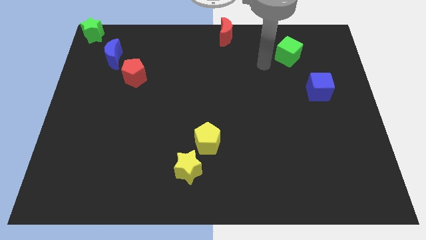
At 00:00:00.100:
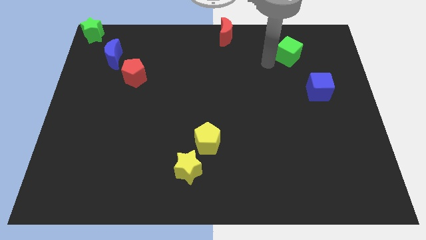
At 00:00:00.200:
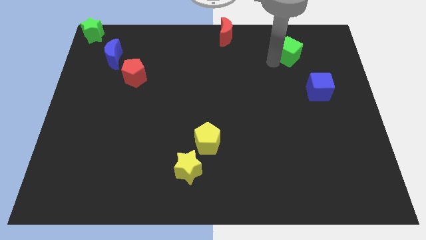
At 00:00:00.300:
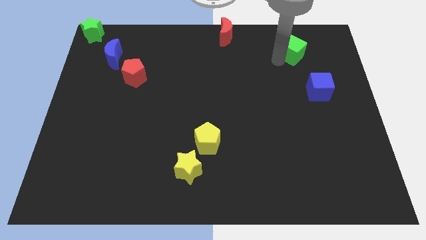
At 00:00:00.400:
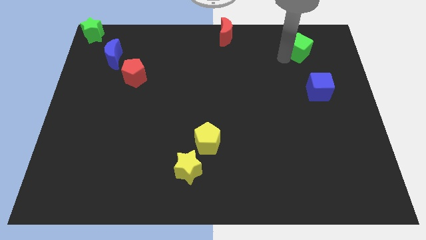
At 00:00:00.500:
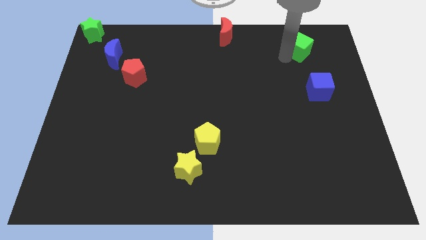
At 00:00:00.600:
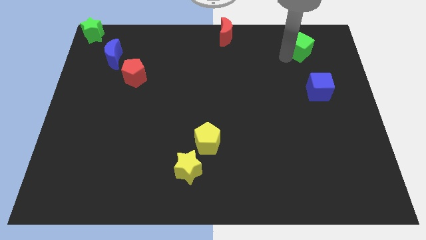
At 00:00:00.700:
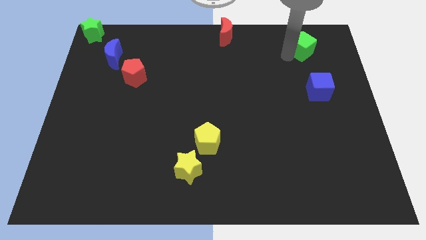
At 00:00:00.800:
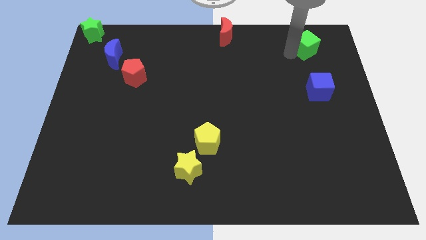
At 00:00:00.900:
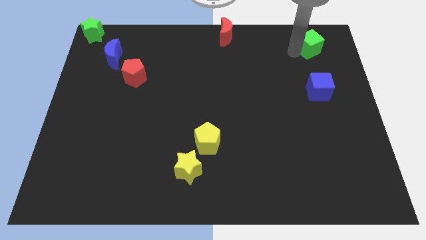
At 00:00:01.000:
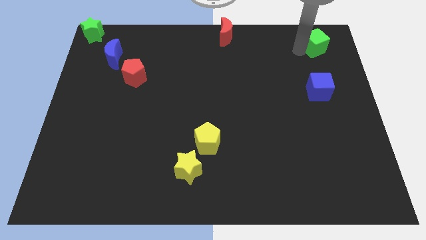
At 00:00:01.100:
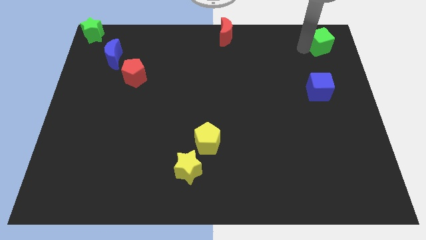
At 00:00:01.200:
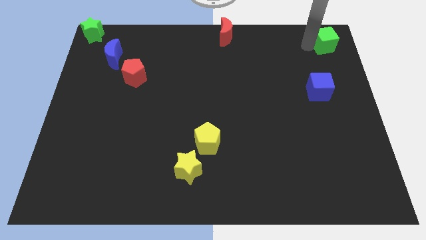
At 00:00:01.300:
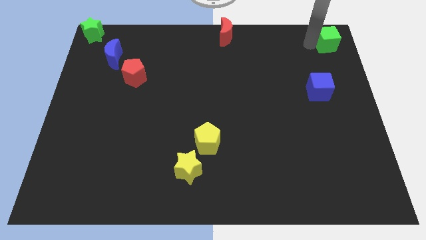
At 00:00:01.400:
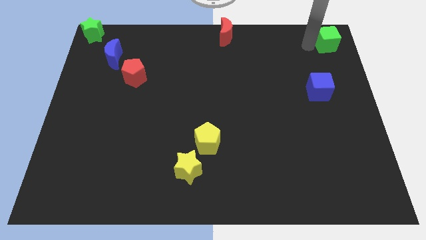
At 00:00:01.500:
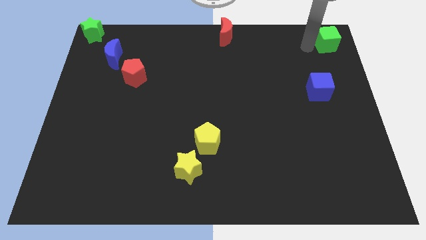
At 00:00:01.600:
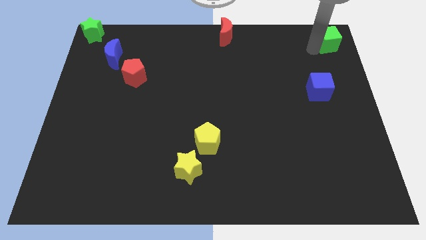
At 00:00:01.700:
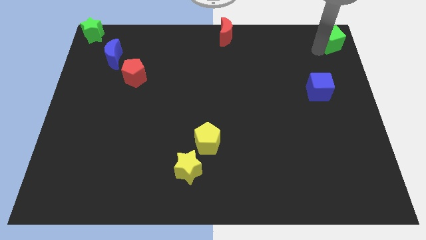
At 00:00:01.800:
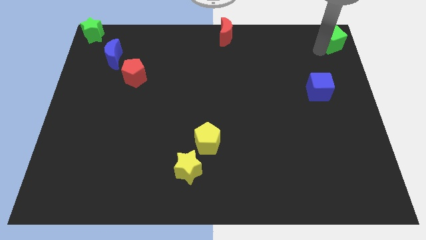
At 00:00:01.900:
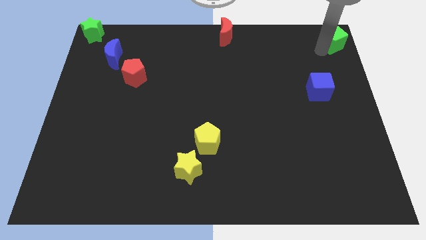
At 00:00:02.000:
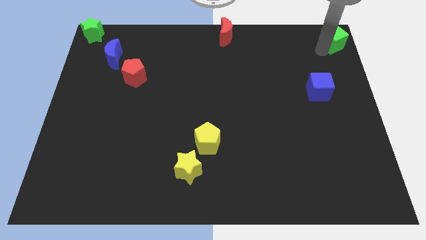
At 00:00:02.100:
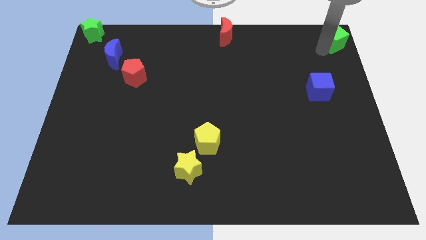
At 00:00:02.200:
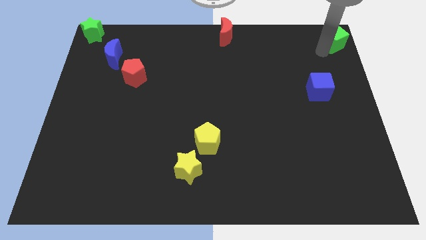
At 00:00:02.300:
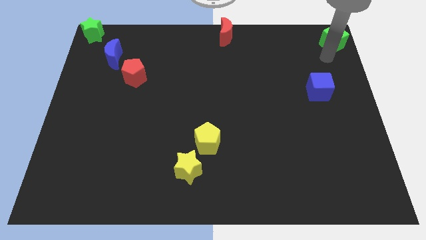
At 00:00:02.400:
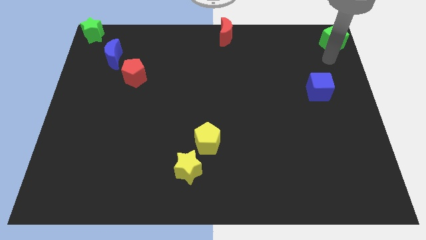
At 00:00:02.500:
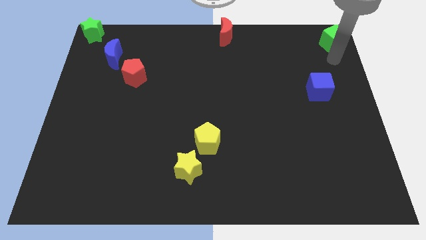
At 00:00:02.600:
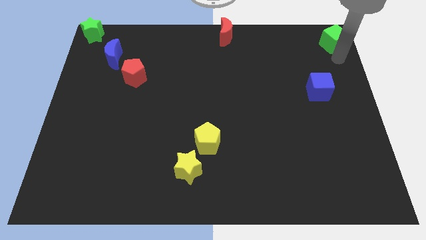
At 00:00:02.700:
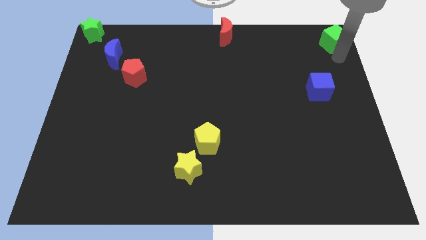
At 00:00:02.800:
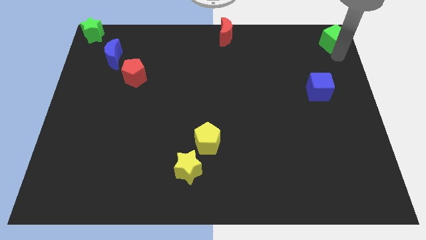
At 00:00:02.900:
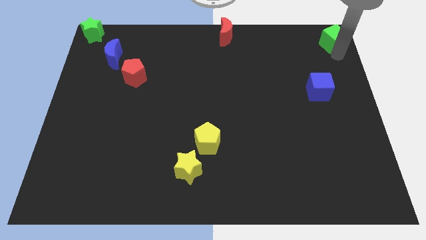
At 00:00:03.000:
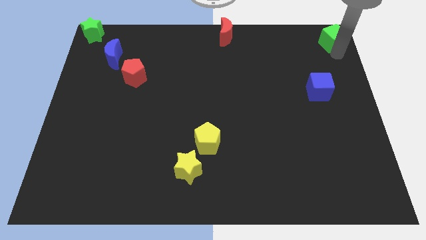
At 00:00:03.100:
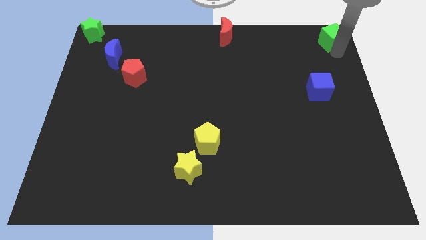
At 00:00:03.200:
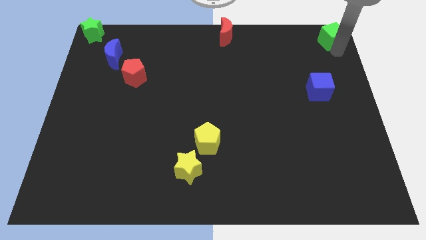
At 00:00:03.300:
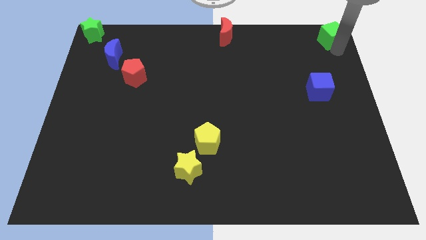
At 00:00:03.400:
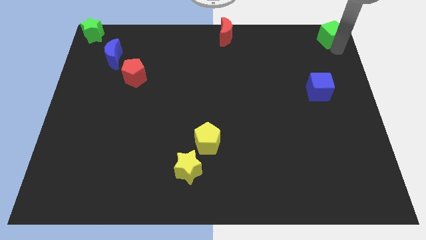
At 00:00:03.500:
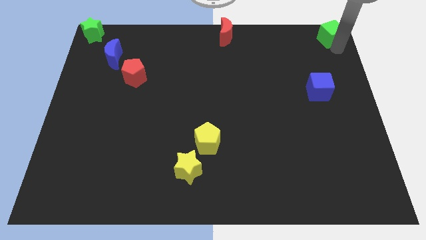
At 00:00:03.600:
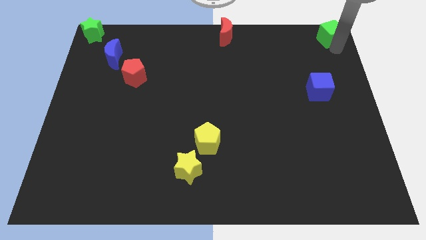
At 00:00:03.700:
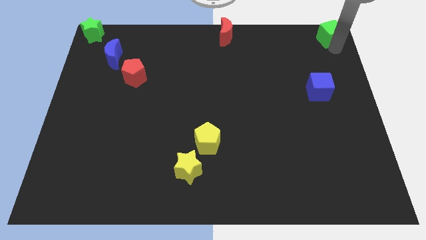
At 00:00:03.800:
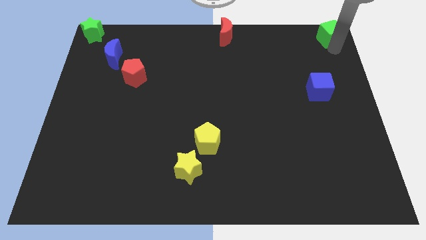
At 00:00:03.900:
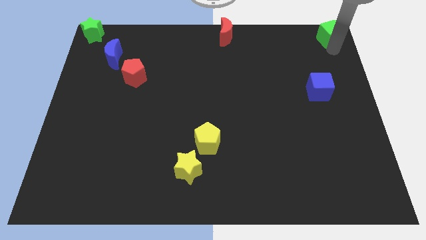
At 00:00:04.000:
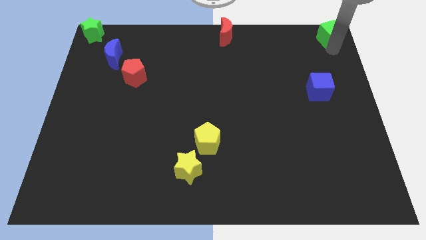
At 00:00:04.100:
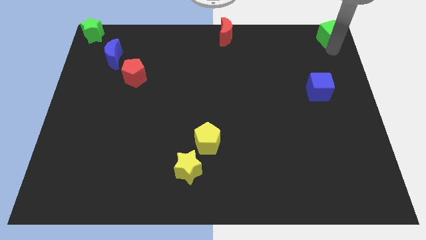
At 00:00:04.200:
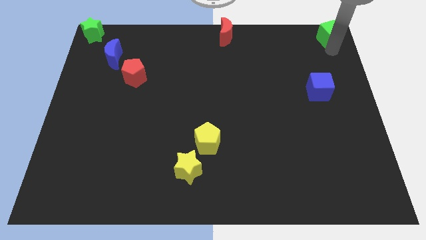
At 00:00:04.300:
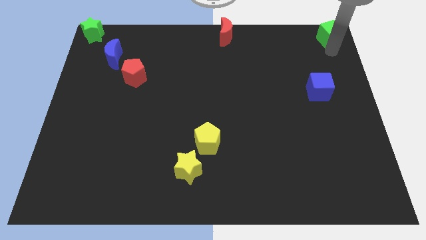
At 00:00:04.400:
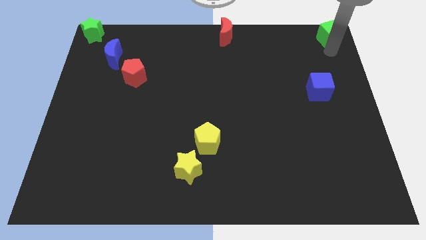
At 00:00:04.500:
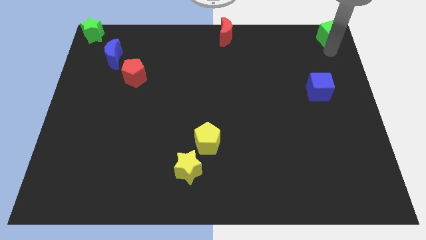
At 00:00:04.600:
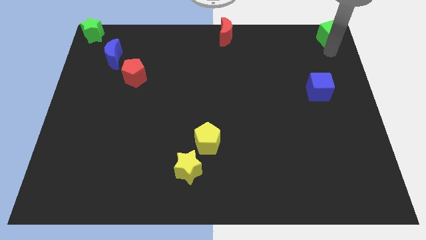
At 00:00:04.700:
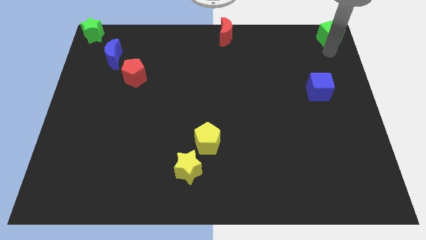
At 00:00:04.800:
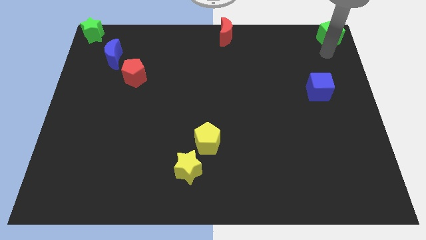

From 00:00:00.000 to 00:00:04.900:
place green block to the top right corner of the board

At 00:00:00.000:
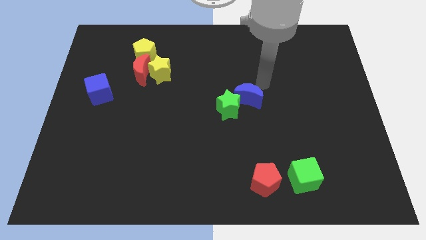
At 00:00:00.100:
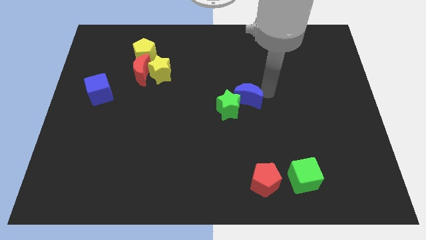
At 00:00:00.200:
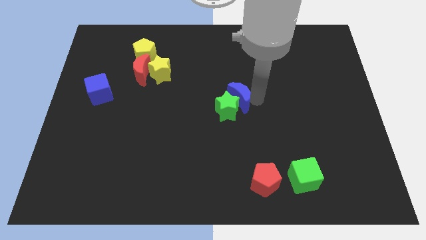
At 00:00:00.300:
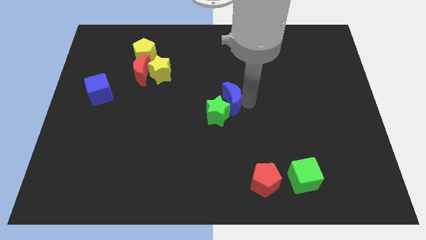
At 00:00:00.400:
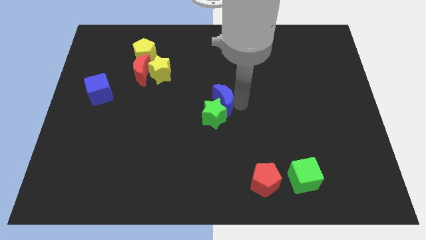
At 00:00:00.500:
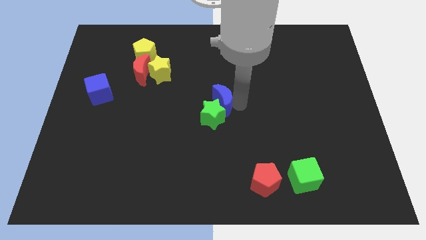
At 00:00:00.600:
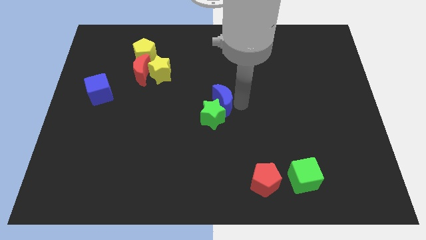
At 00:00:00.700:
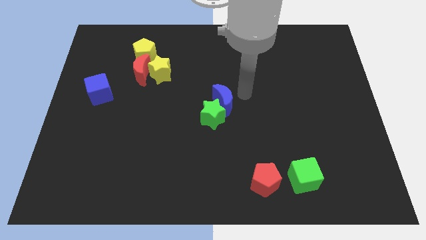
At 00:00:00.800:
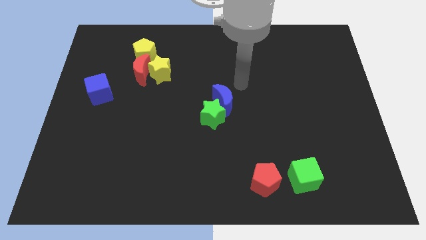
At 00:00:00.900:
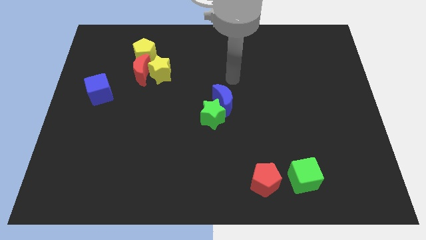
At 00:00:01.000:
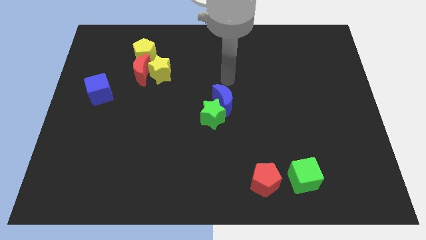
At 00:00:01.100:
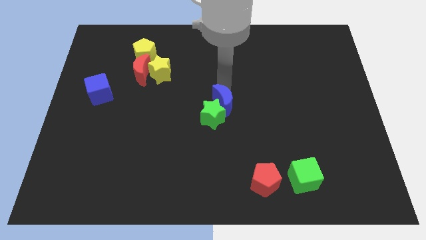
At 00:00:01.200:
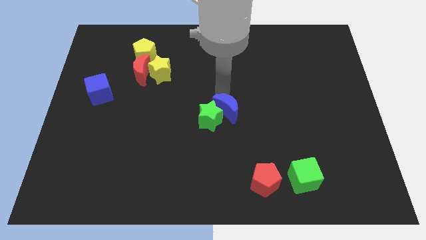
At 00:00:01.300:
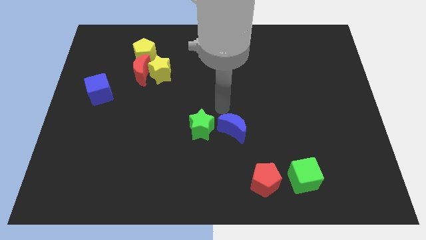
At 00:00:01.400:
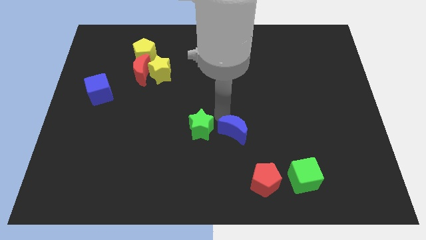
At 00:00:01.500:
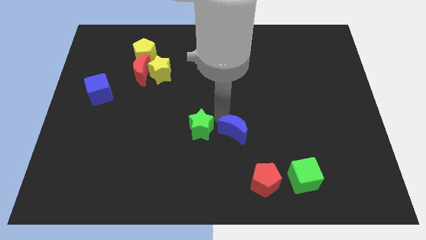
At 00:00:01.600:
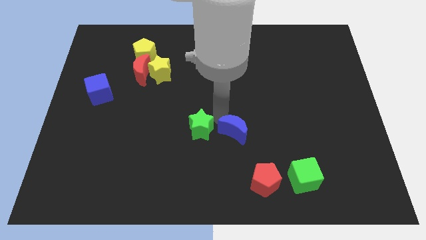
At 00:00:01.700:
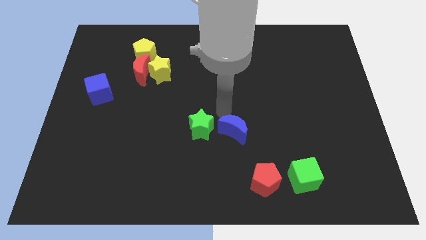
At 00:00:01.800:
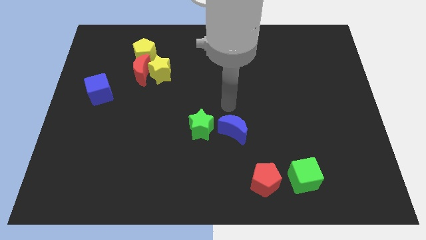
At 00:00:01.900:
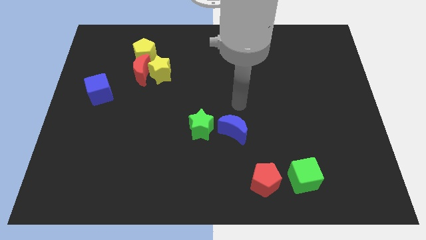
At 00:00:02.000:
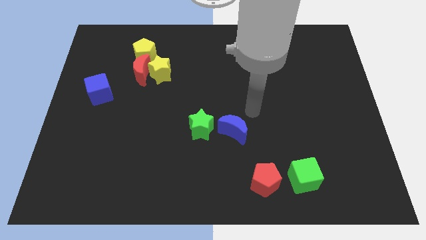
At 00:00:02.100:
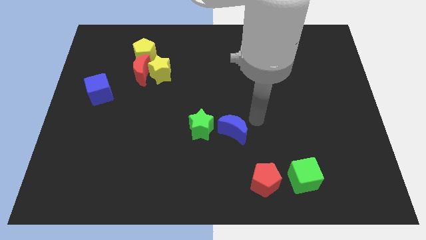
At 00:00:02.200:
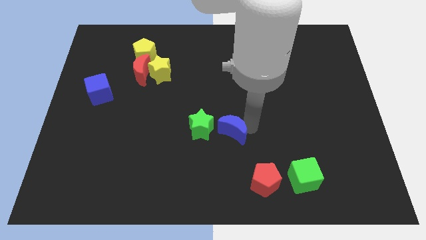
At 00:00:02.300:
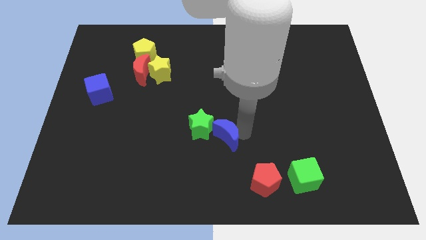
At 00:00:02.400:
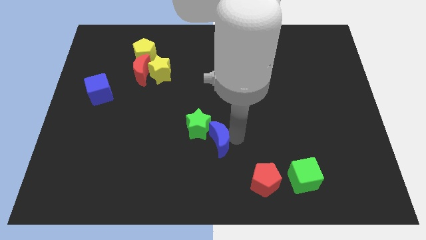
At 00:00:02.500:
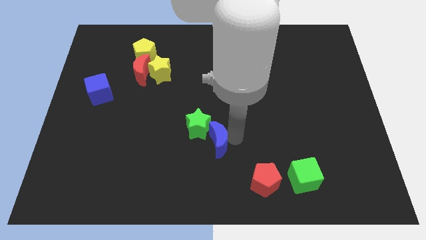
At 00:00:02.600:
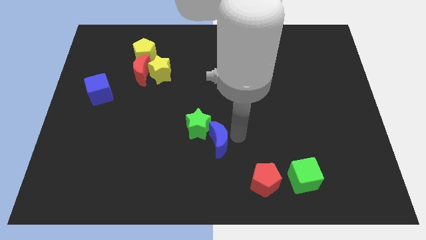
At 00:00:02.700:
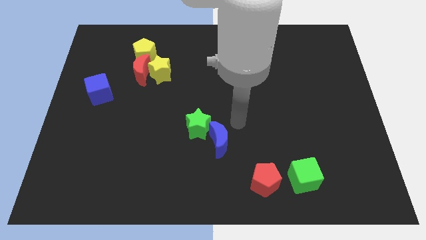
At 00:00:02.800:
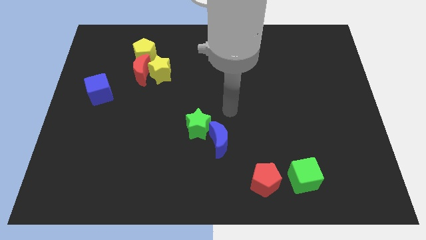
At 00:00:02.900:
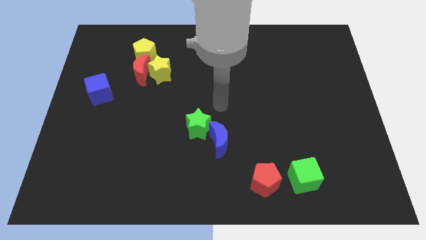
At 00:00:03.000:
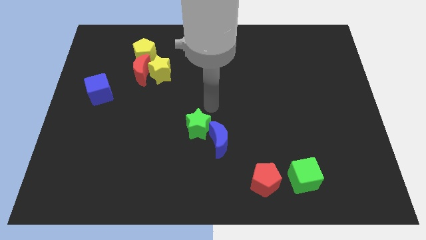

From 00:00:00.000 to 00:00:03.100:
move the green star and blue crescent to bottom

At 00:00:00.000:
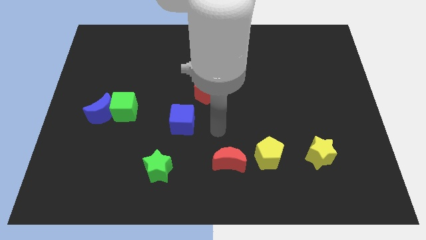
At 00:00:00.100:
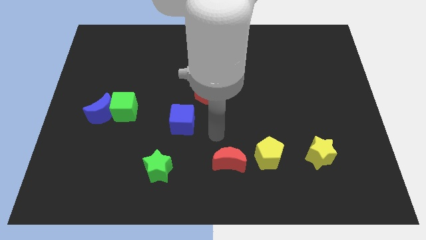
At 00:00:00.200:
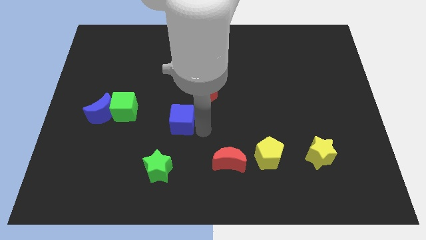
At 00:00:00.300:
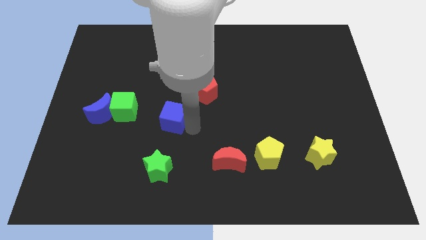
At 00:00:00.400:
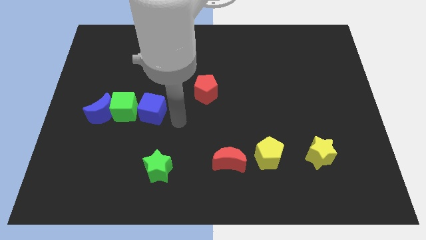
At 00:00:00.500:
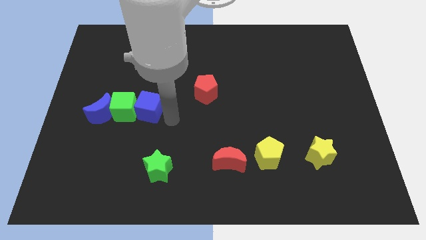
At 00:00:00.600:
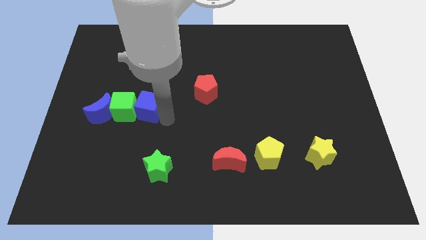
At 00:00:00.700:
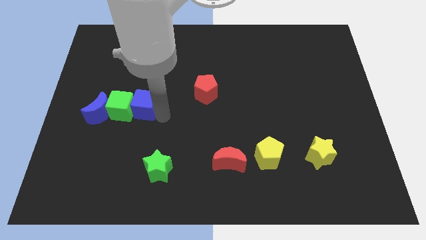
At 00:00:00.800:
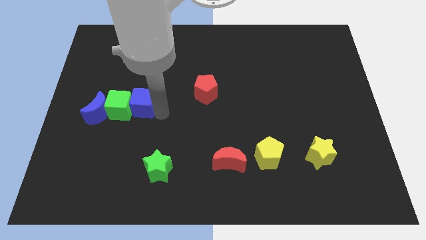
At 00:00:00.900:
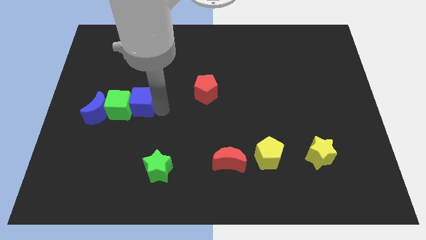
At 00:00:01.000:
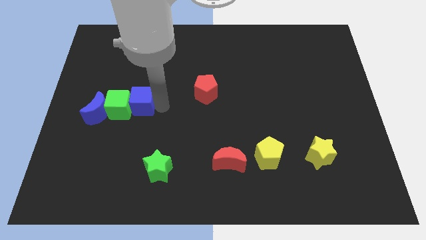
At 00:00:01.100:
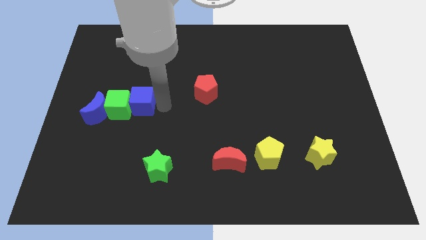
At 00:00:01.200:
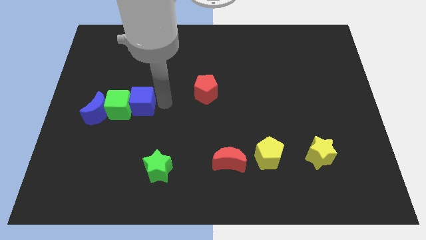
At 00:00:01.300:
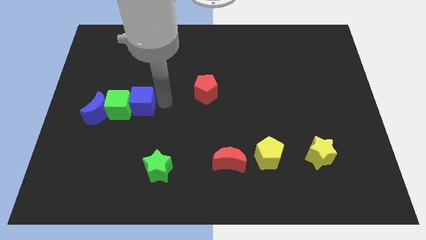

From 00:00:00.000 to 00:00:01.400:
push the blue cube into the green cube
